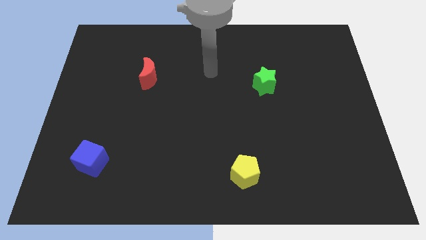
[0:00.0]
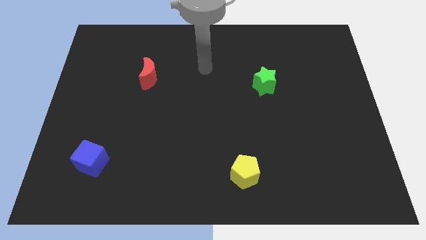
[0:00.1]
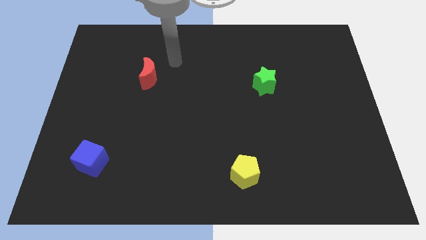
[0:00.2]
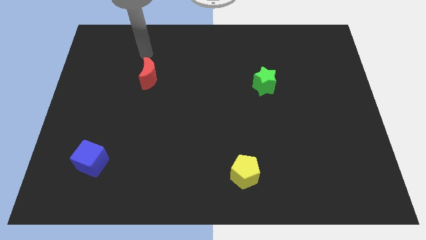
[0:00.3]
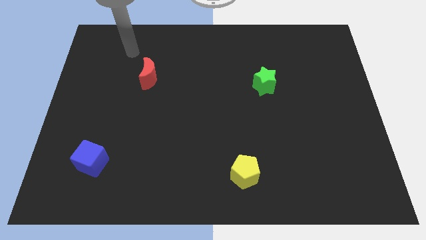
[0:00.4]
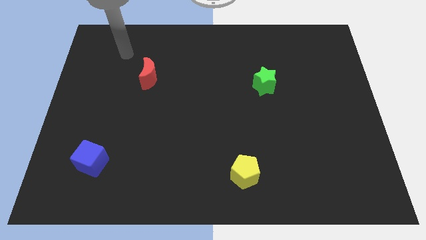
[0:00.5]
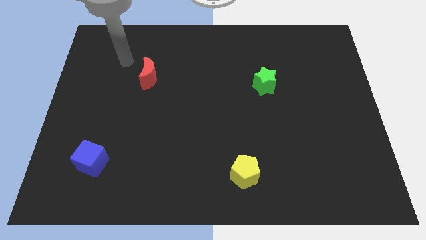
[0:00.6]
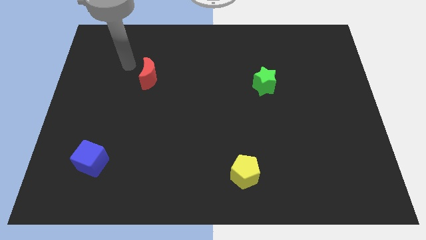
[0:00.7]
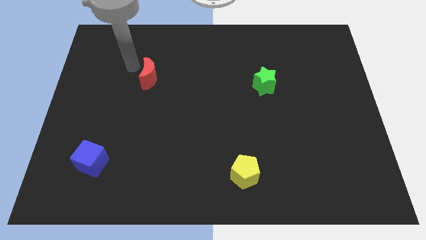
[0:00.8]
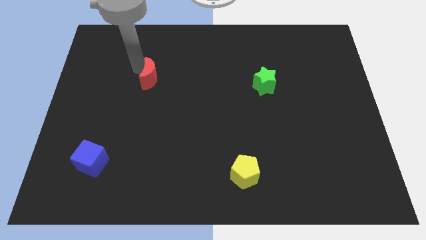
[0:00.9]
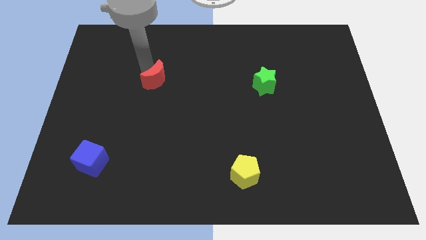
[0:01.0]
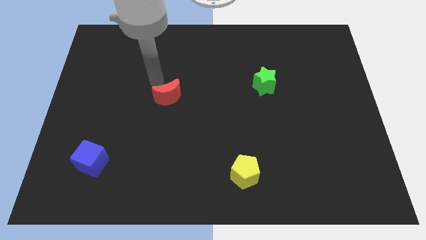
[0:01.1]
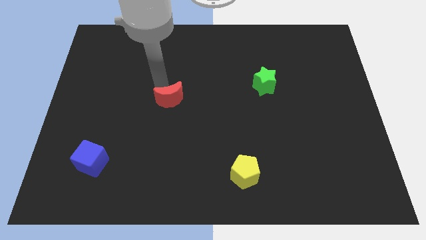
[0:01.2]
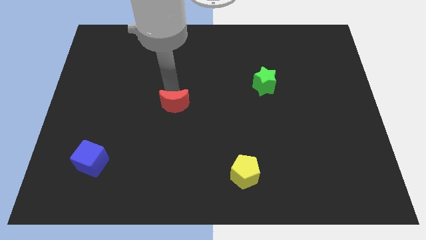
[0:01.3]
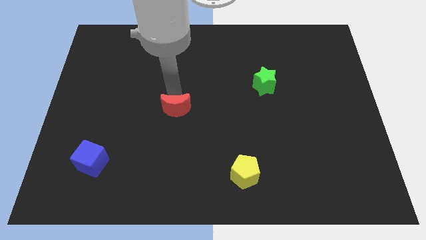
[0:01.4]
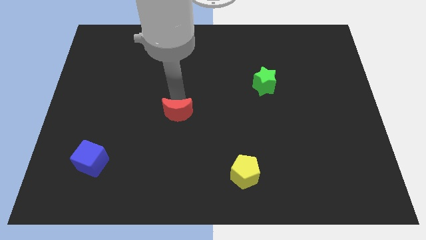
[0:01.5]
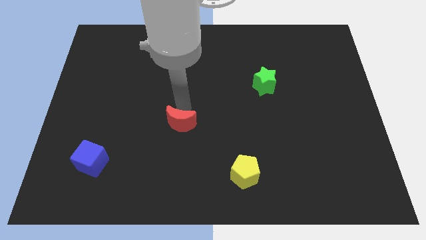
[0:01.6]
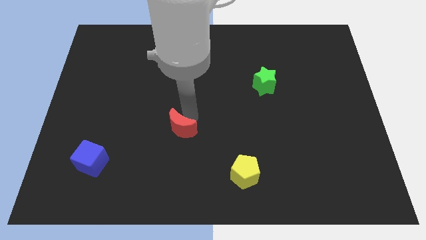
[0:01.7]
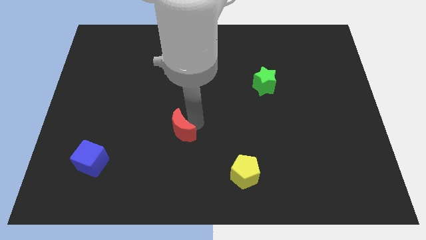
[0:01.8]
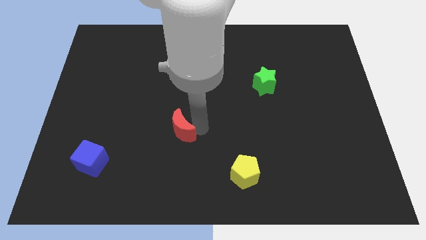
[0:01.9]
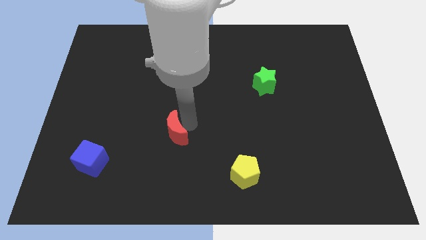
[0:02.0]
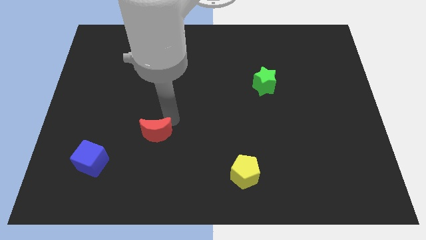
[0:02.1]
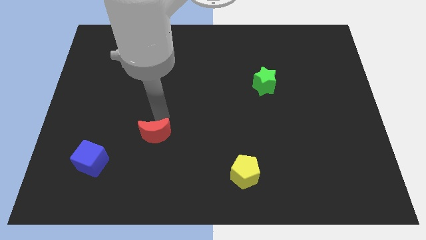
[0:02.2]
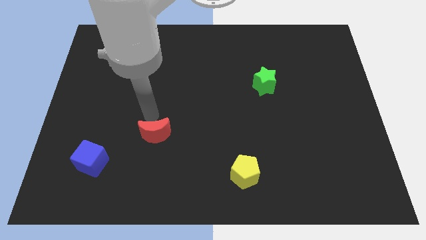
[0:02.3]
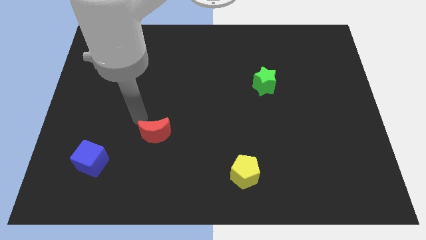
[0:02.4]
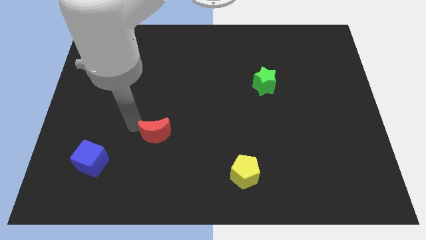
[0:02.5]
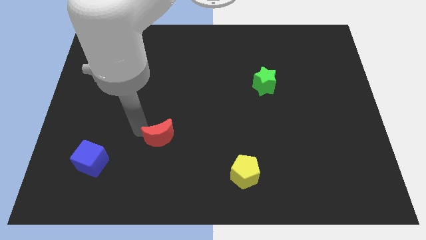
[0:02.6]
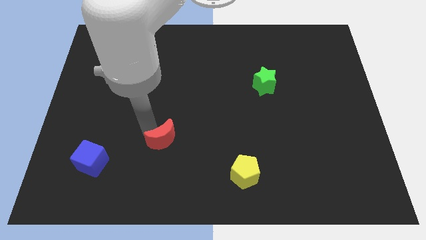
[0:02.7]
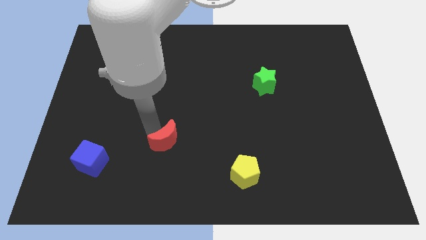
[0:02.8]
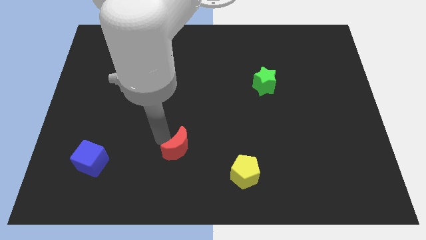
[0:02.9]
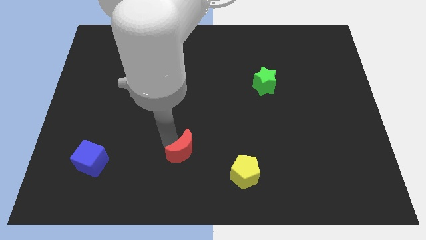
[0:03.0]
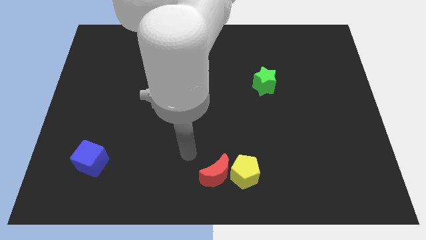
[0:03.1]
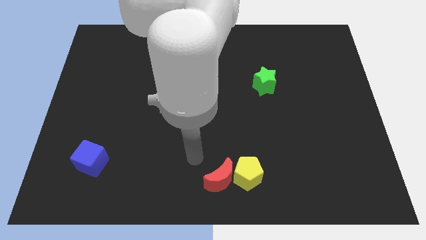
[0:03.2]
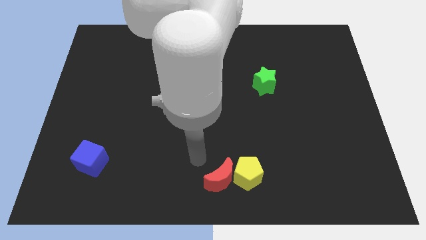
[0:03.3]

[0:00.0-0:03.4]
push the moon to the yellow pentagon

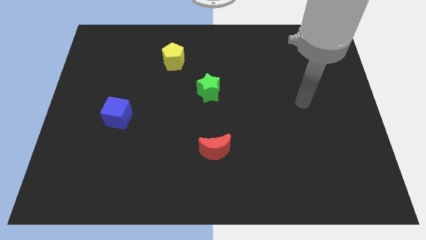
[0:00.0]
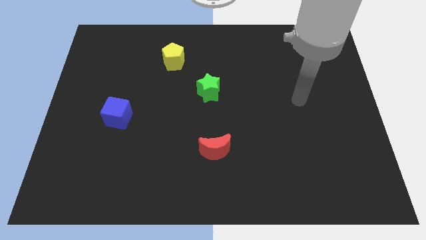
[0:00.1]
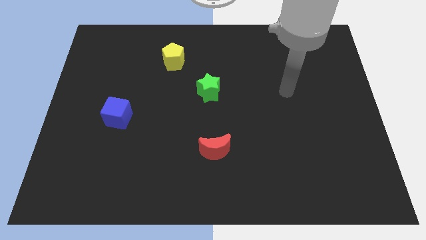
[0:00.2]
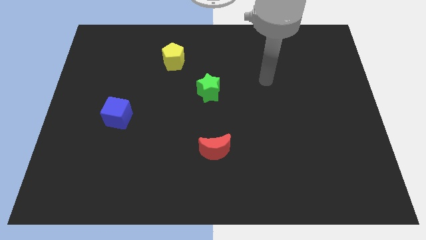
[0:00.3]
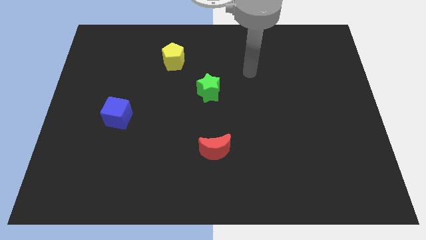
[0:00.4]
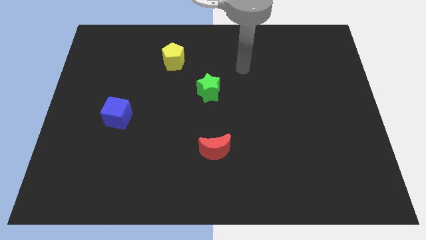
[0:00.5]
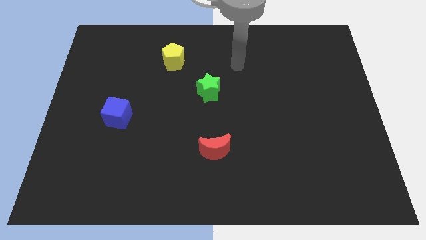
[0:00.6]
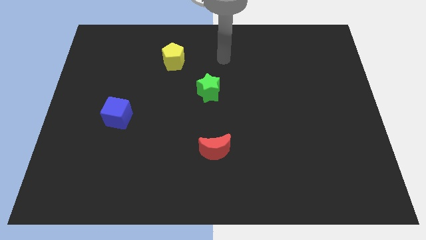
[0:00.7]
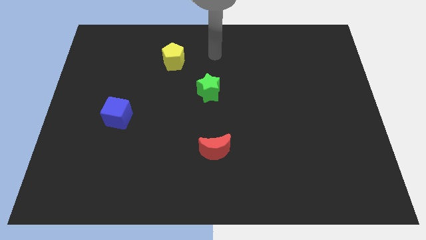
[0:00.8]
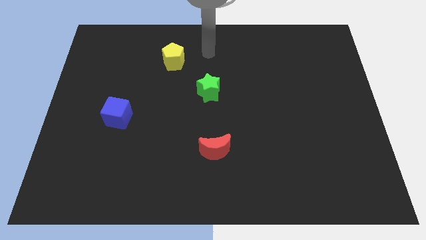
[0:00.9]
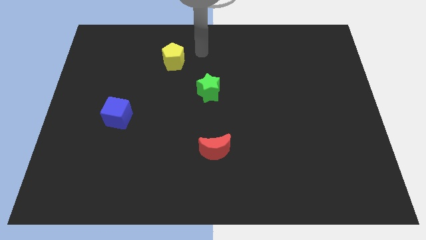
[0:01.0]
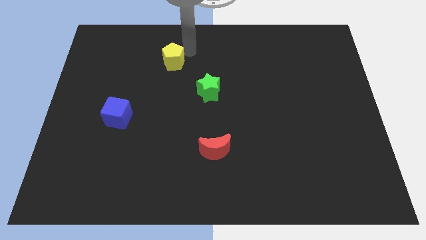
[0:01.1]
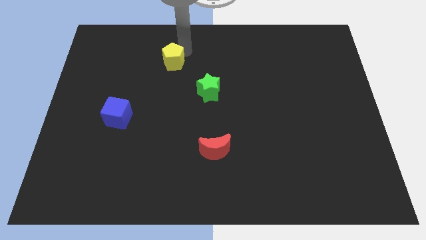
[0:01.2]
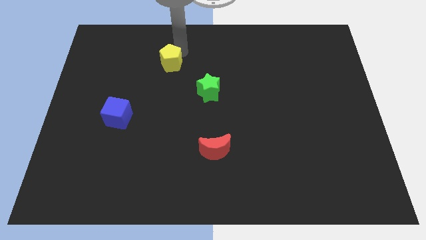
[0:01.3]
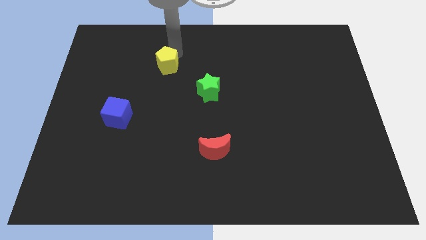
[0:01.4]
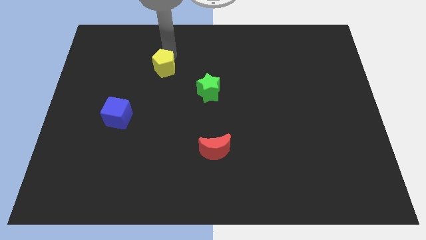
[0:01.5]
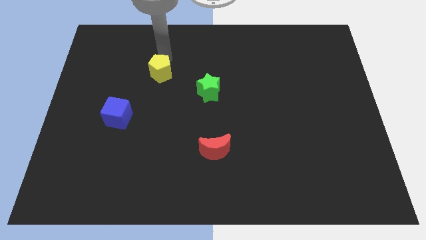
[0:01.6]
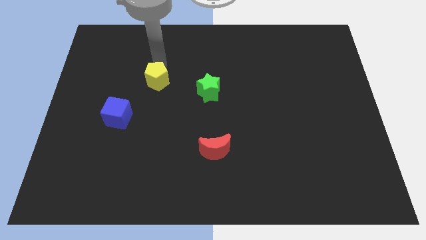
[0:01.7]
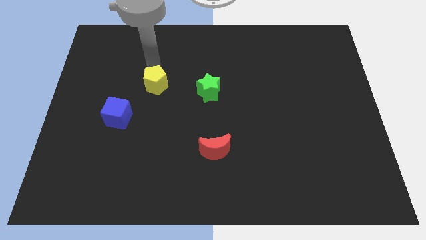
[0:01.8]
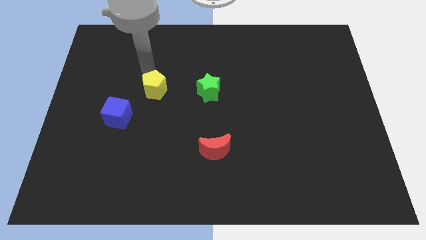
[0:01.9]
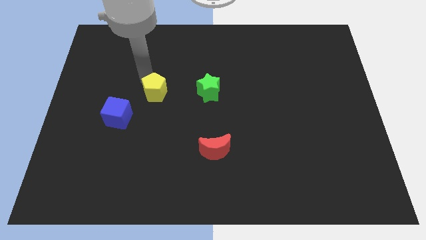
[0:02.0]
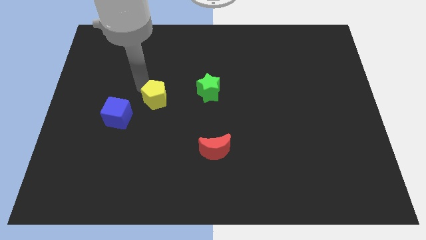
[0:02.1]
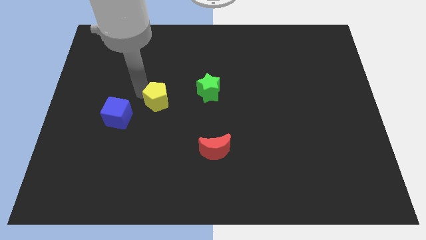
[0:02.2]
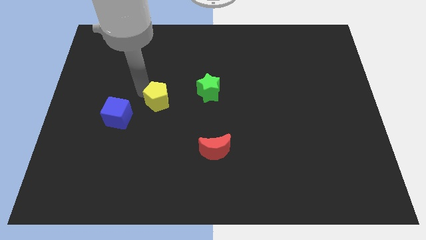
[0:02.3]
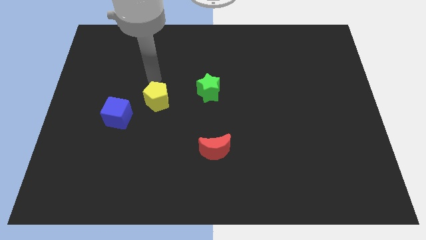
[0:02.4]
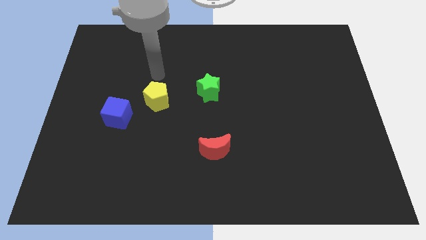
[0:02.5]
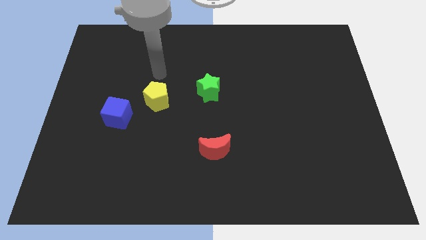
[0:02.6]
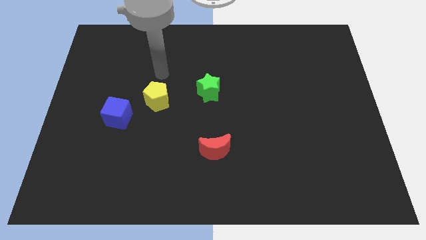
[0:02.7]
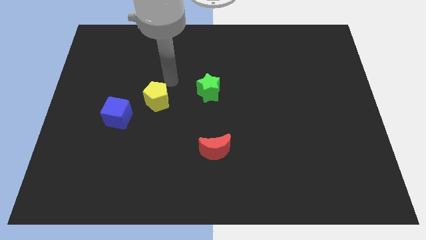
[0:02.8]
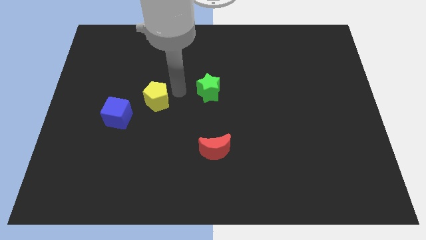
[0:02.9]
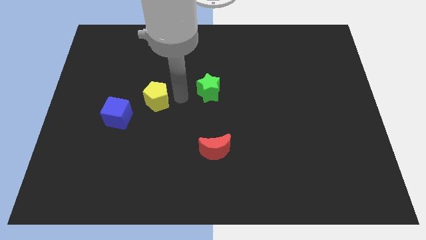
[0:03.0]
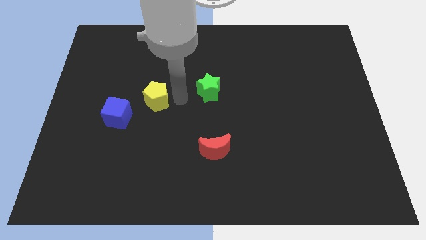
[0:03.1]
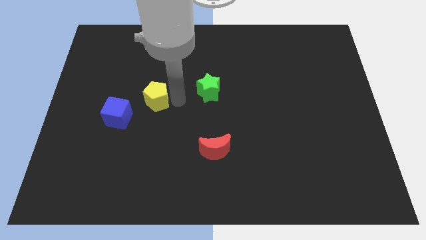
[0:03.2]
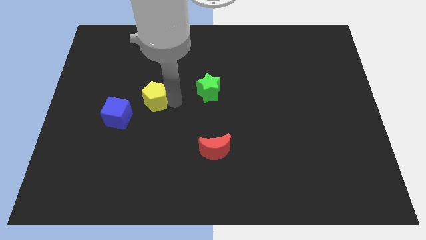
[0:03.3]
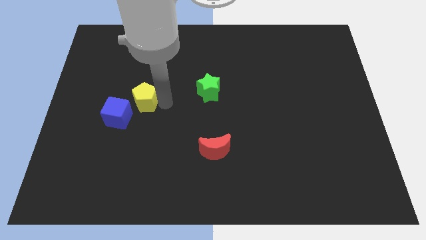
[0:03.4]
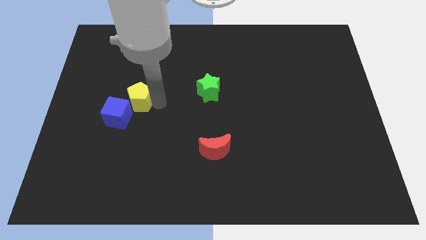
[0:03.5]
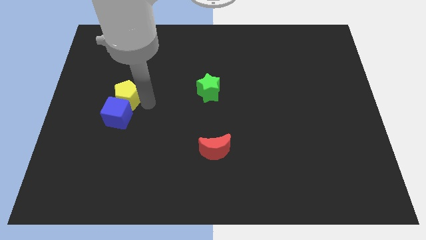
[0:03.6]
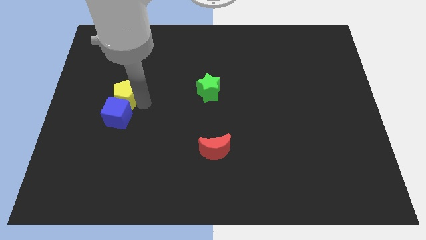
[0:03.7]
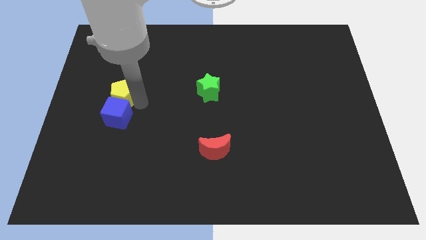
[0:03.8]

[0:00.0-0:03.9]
move the pentagon to the blue block

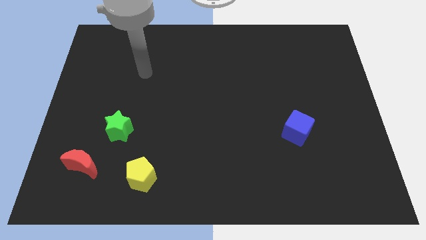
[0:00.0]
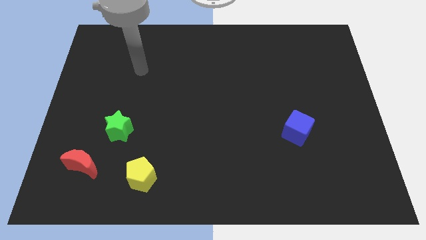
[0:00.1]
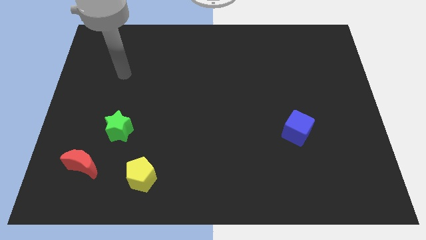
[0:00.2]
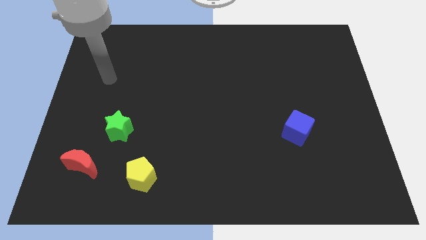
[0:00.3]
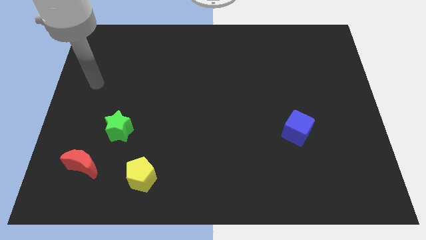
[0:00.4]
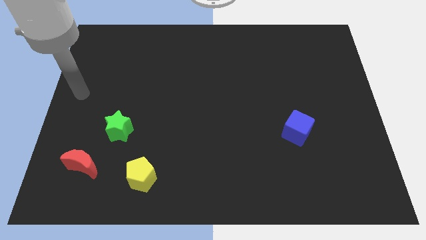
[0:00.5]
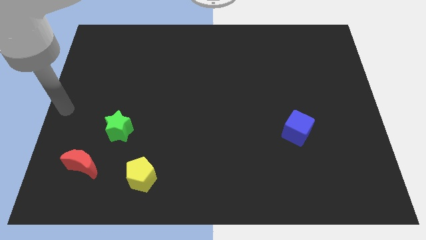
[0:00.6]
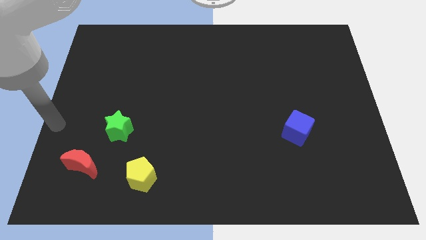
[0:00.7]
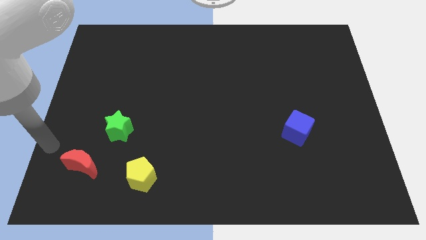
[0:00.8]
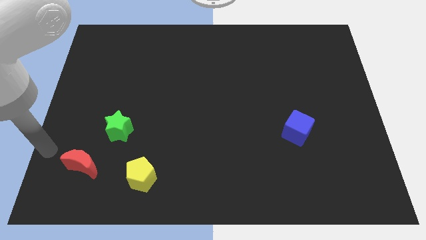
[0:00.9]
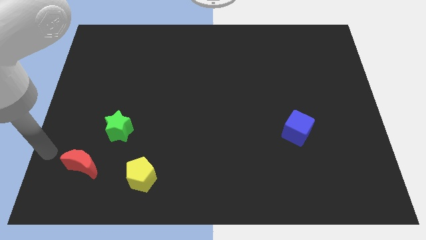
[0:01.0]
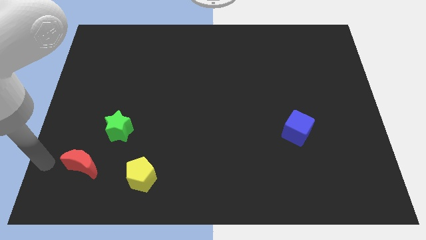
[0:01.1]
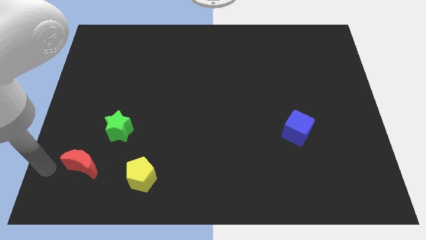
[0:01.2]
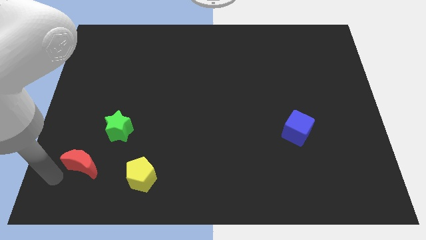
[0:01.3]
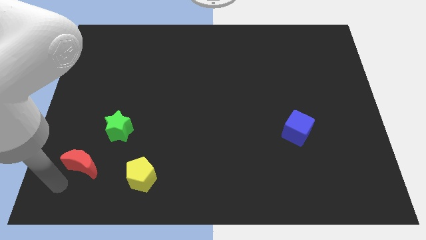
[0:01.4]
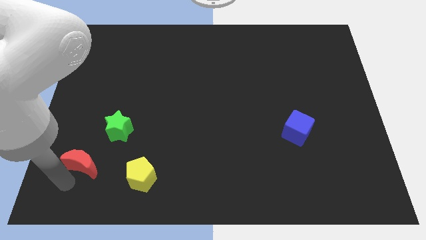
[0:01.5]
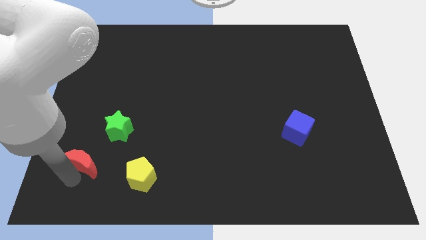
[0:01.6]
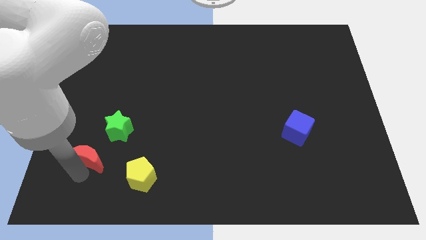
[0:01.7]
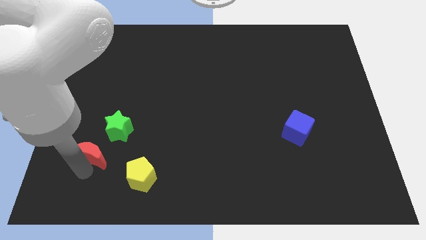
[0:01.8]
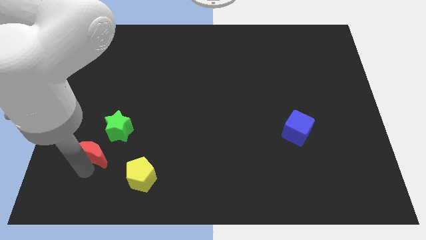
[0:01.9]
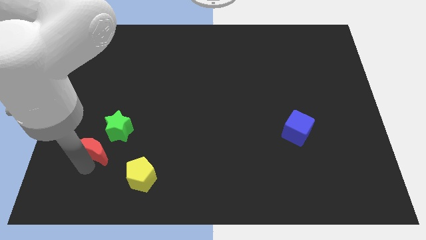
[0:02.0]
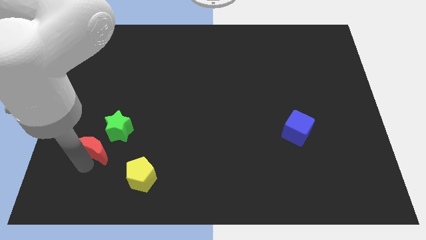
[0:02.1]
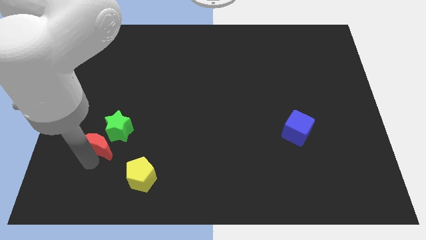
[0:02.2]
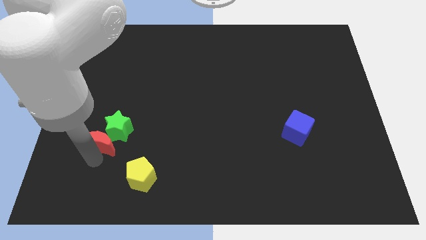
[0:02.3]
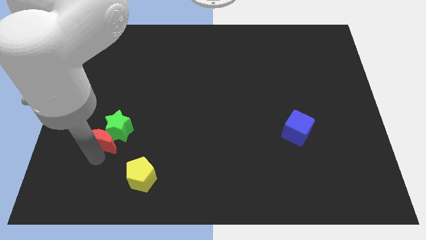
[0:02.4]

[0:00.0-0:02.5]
put the moon to the green star
